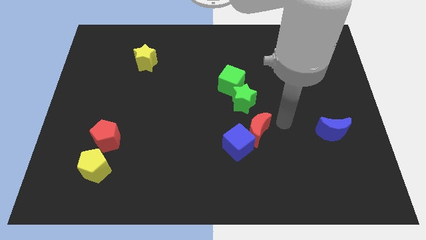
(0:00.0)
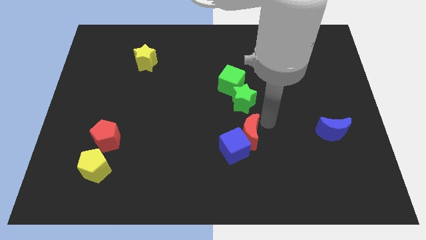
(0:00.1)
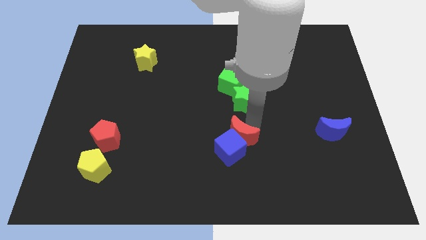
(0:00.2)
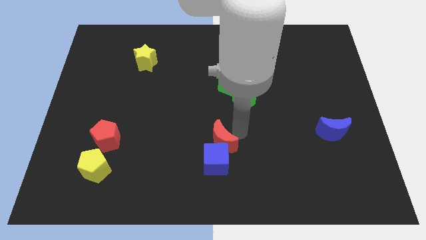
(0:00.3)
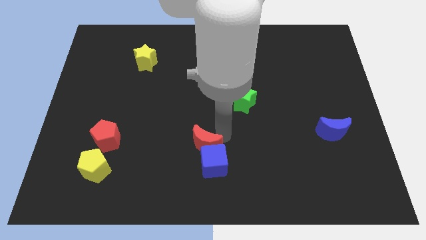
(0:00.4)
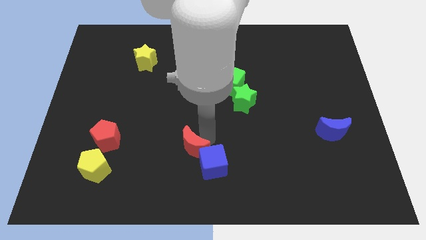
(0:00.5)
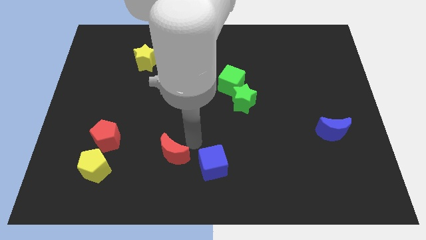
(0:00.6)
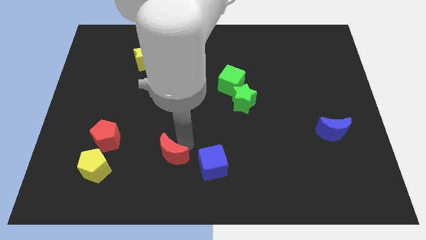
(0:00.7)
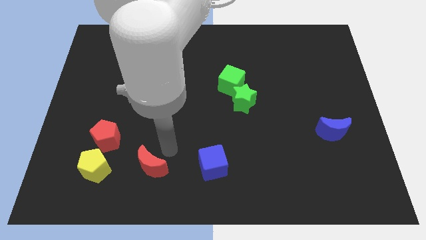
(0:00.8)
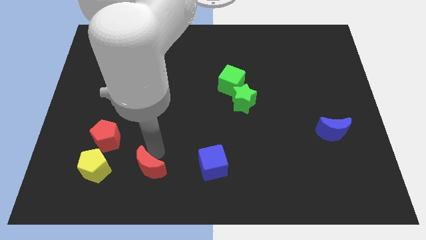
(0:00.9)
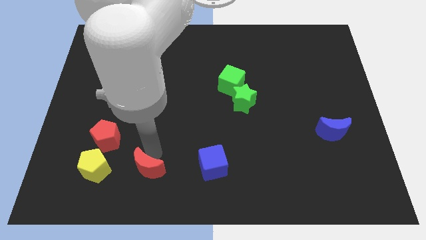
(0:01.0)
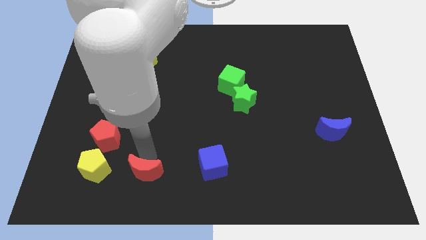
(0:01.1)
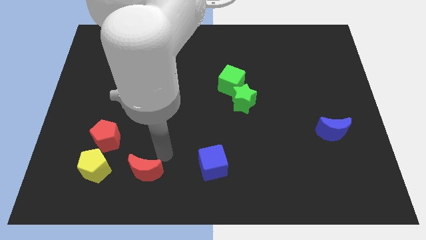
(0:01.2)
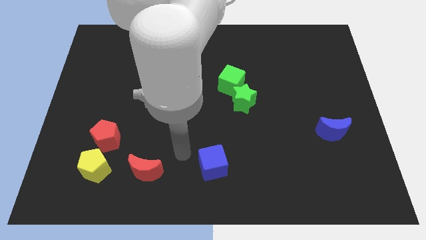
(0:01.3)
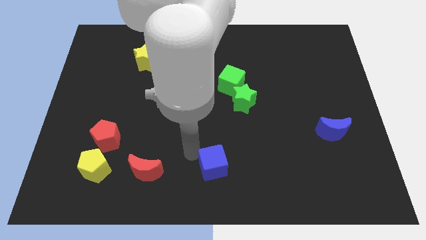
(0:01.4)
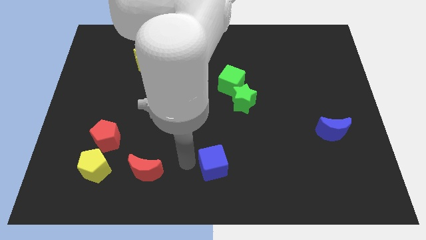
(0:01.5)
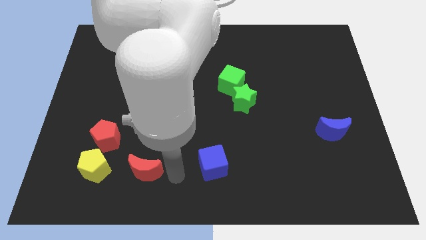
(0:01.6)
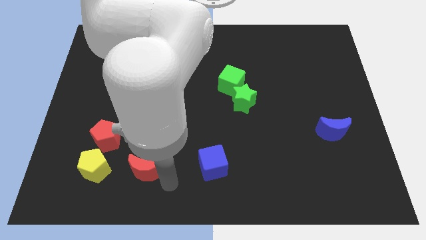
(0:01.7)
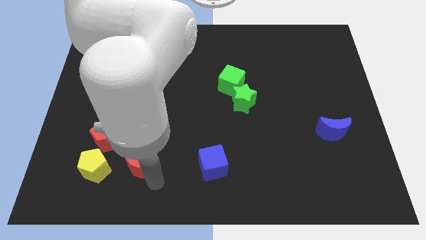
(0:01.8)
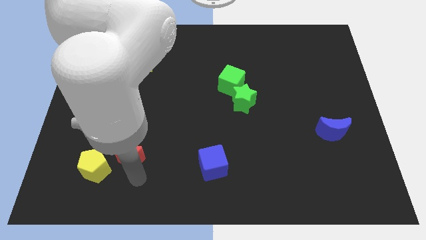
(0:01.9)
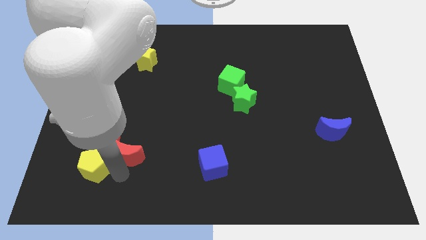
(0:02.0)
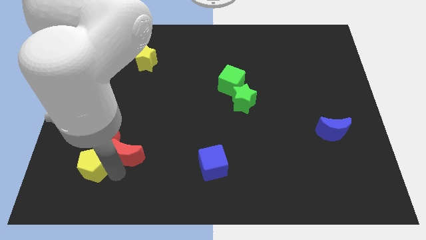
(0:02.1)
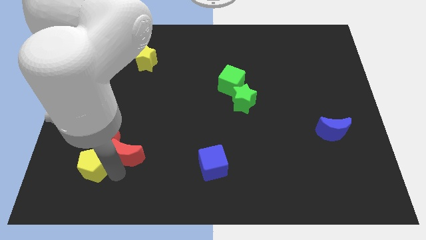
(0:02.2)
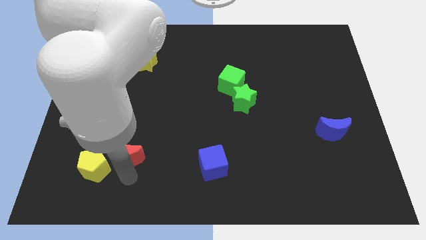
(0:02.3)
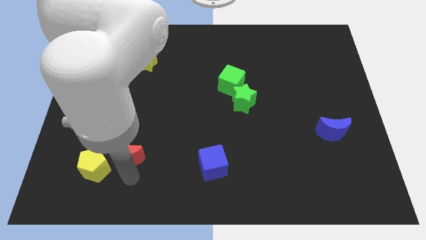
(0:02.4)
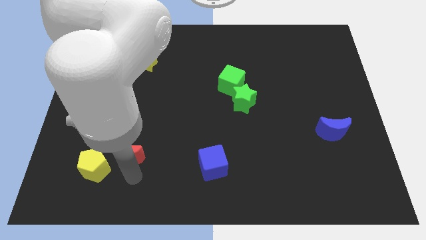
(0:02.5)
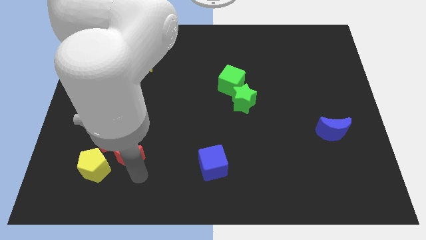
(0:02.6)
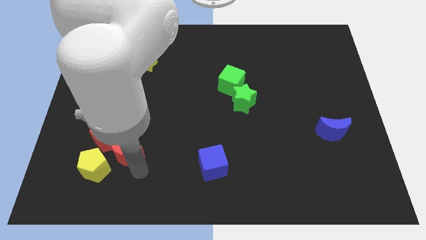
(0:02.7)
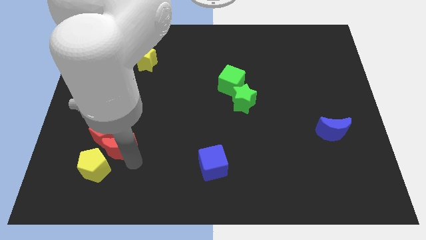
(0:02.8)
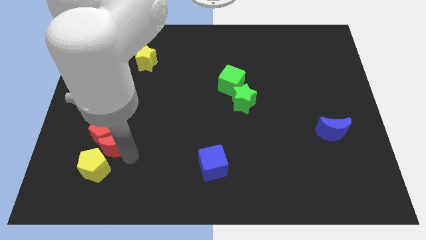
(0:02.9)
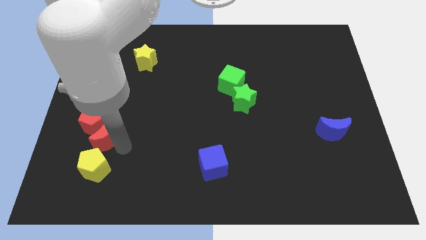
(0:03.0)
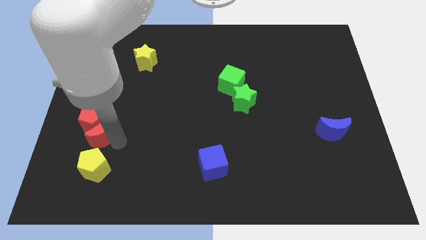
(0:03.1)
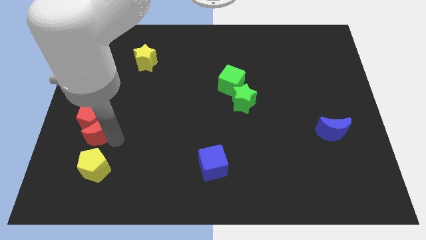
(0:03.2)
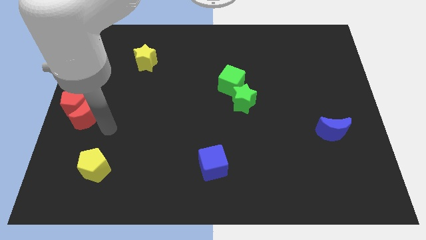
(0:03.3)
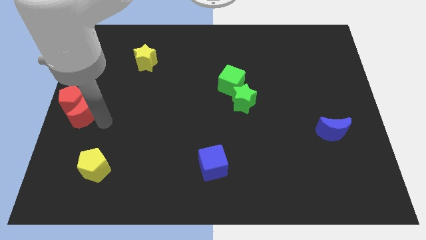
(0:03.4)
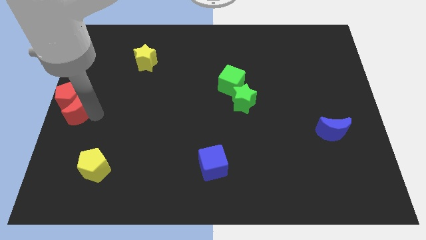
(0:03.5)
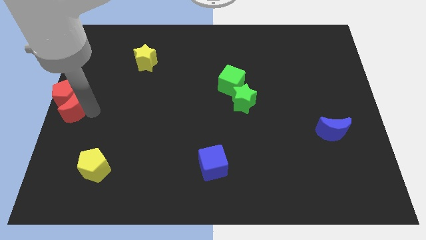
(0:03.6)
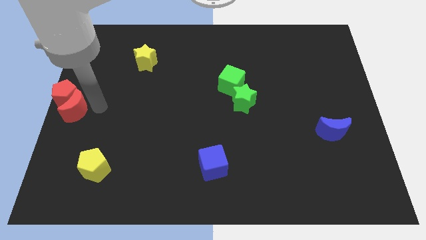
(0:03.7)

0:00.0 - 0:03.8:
push the red crescent into the red pentagon

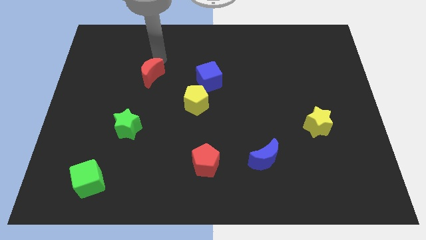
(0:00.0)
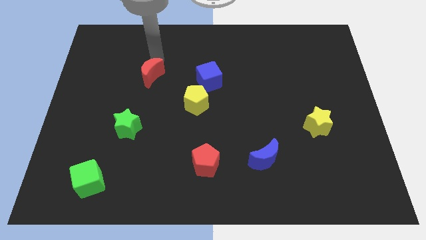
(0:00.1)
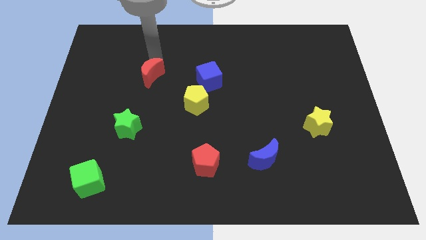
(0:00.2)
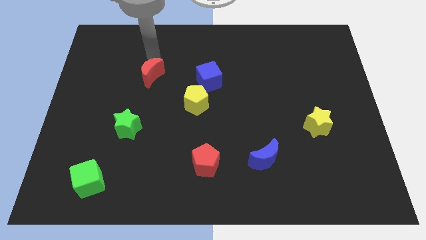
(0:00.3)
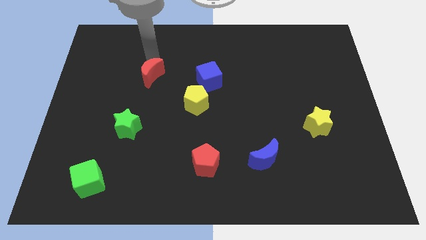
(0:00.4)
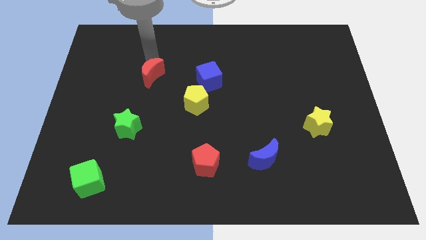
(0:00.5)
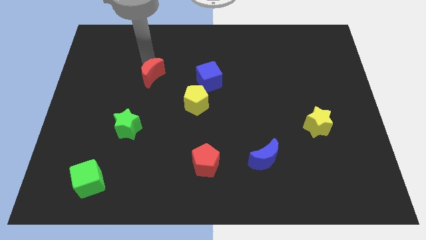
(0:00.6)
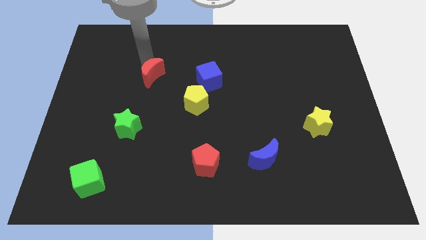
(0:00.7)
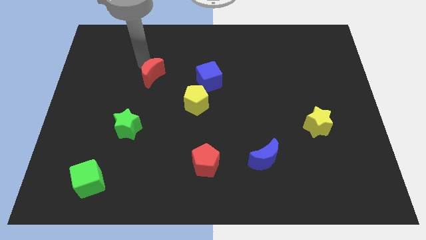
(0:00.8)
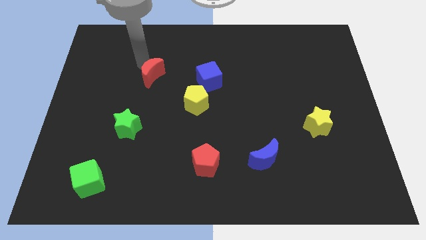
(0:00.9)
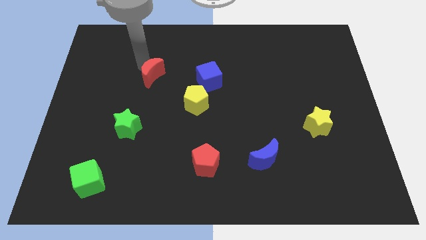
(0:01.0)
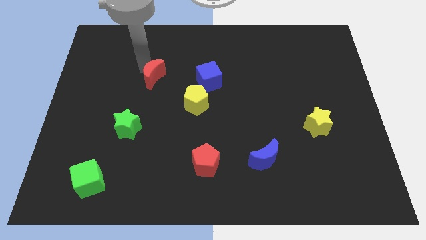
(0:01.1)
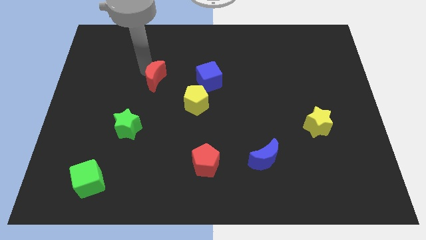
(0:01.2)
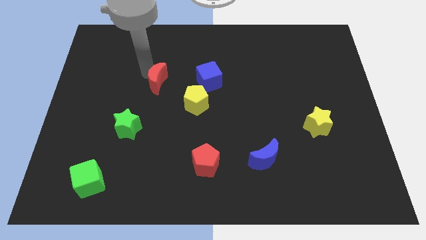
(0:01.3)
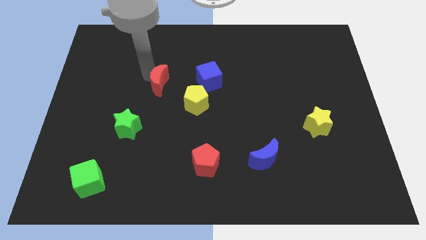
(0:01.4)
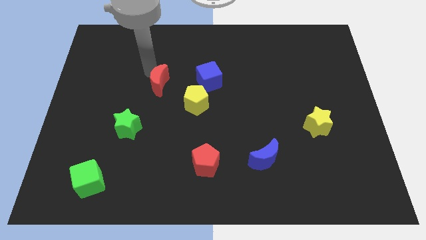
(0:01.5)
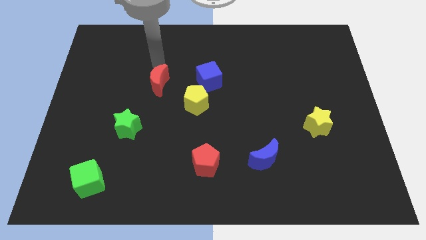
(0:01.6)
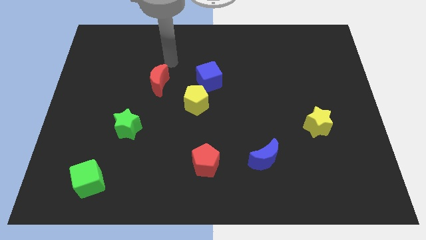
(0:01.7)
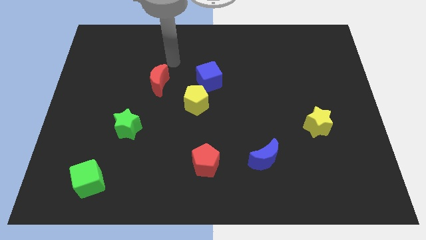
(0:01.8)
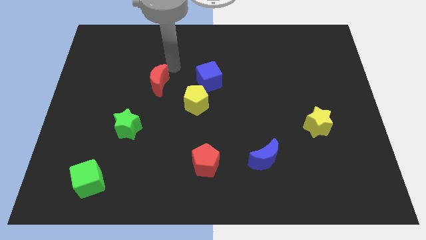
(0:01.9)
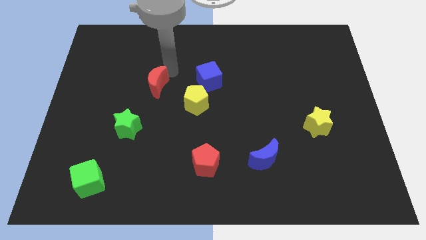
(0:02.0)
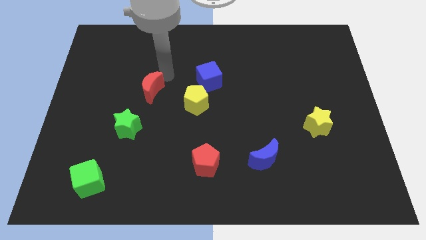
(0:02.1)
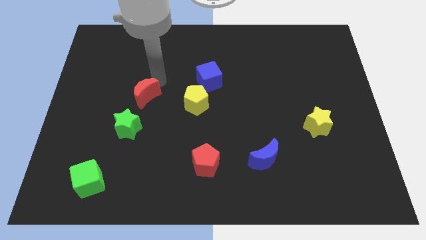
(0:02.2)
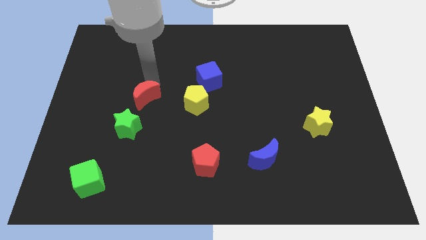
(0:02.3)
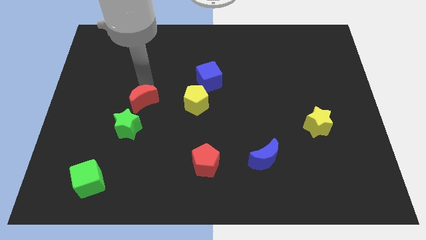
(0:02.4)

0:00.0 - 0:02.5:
move red moon towards green star

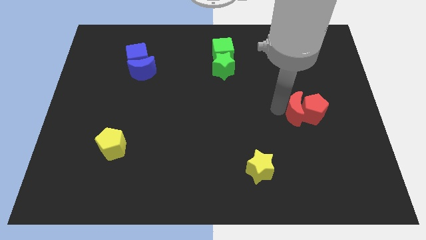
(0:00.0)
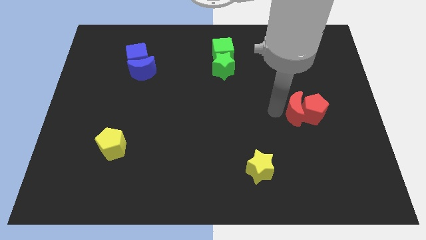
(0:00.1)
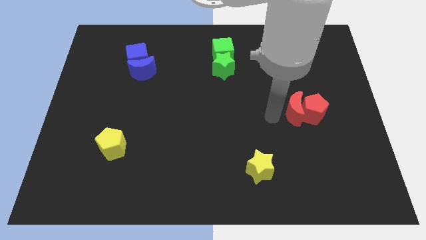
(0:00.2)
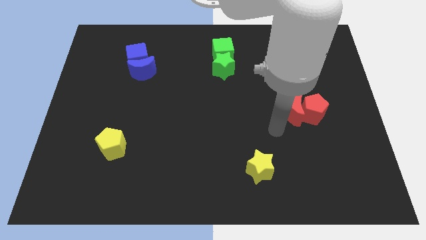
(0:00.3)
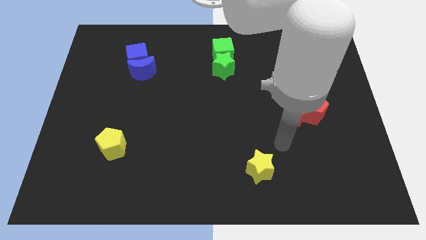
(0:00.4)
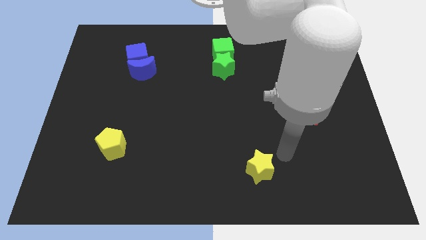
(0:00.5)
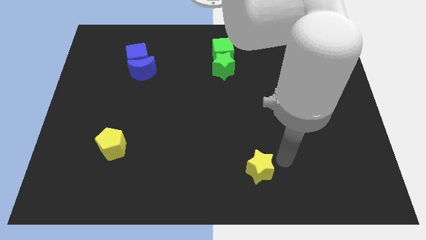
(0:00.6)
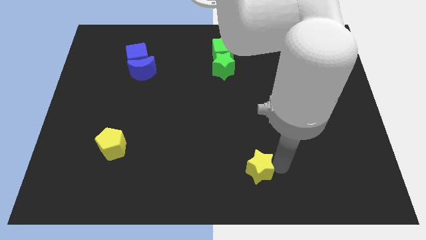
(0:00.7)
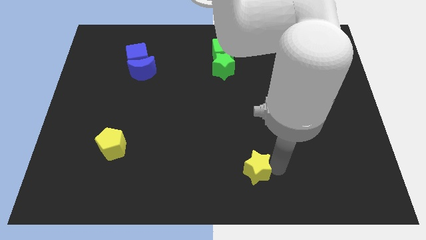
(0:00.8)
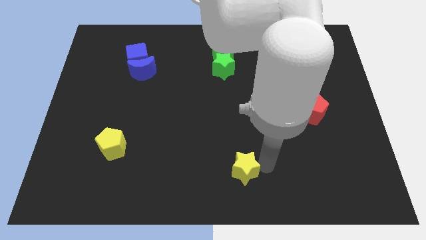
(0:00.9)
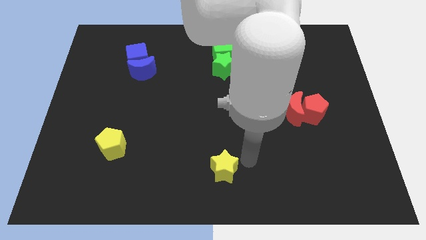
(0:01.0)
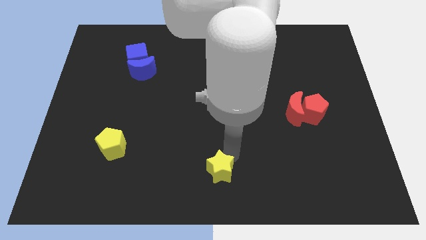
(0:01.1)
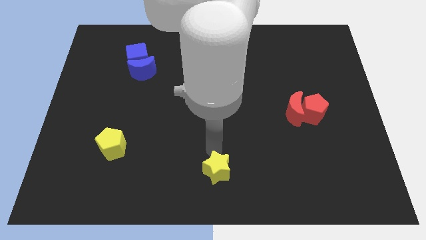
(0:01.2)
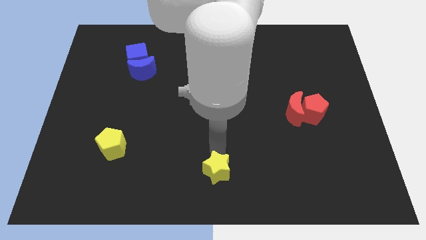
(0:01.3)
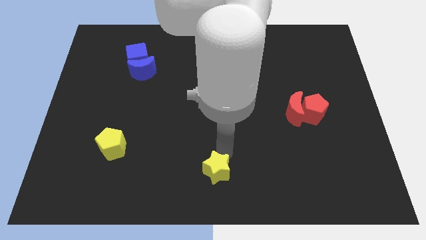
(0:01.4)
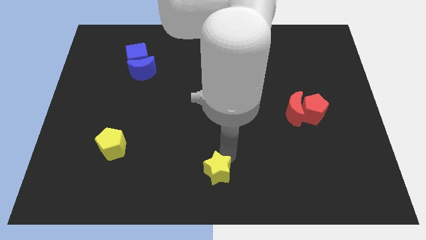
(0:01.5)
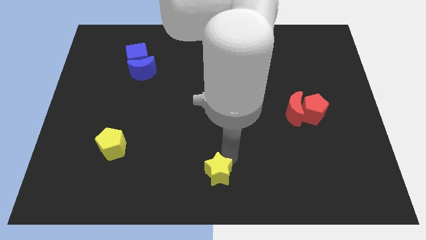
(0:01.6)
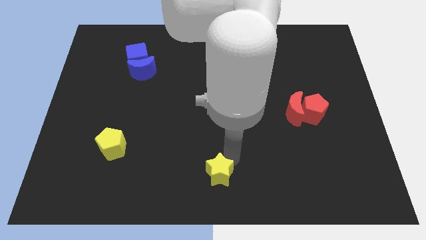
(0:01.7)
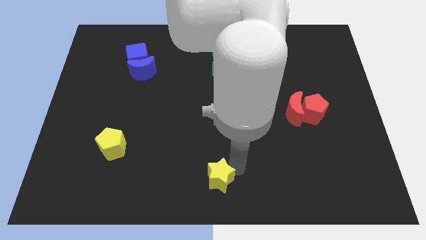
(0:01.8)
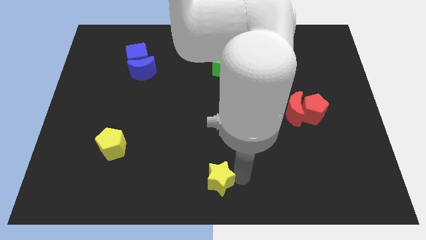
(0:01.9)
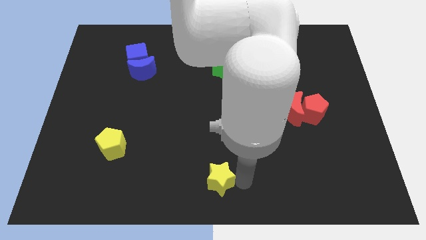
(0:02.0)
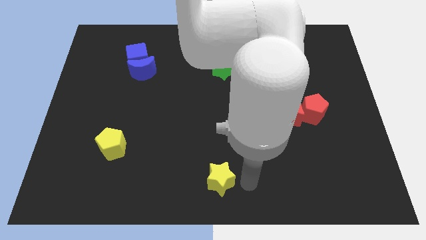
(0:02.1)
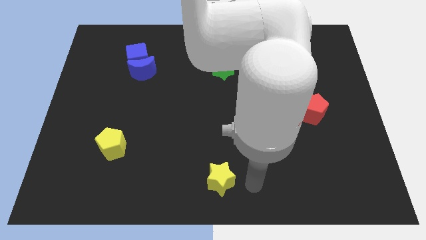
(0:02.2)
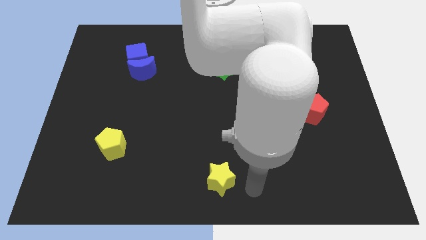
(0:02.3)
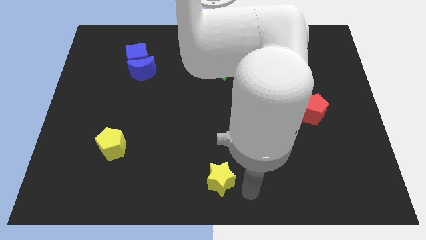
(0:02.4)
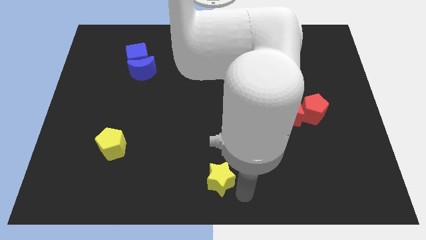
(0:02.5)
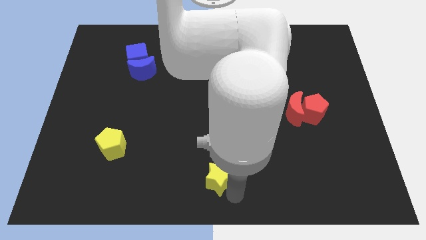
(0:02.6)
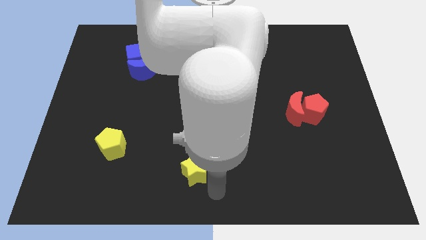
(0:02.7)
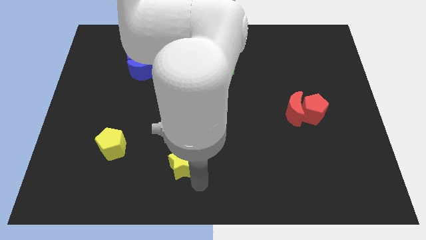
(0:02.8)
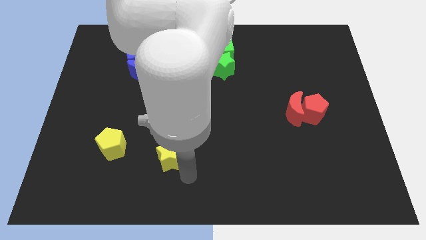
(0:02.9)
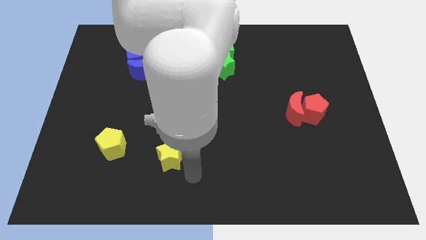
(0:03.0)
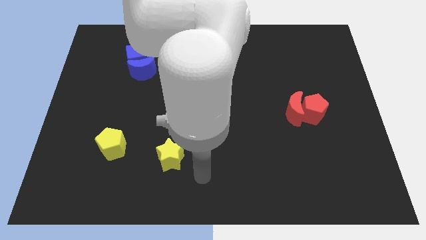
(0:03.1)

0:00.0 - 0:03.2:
slide the yellow star towards the yellow pentagon
